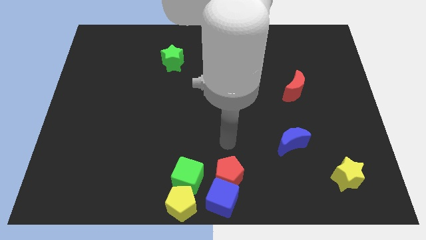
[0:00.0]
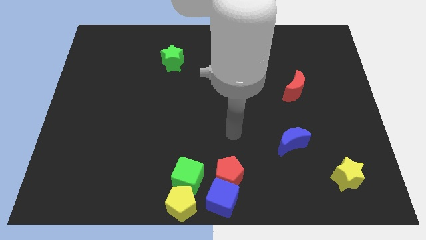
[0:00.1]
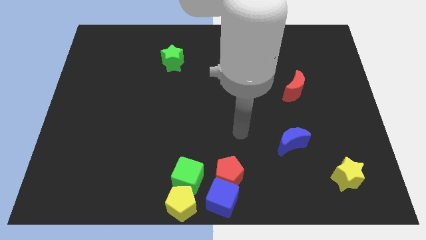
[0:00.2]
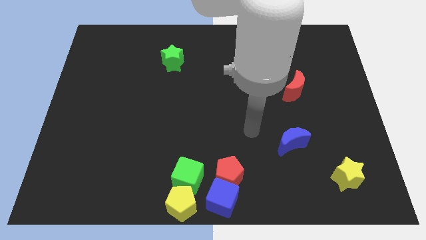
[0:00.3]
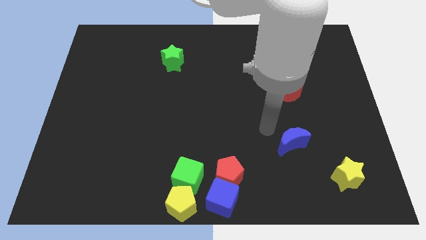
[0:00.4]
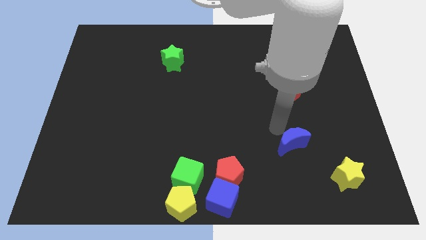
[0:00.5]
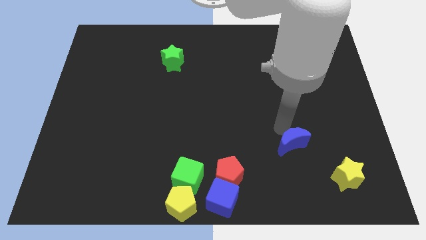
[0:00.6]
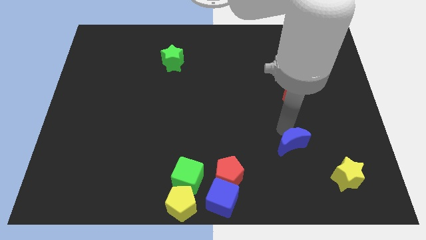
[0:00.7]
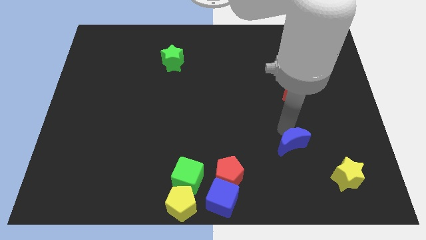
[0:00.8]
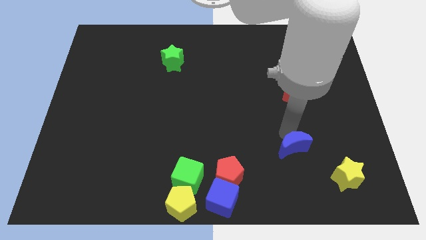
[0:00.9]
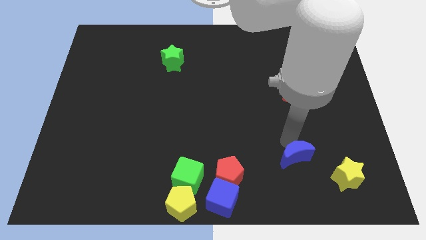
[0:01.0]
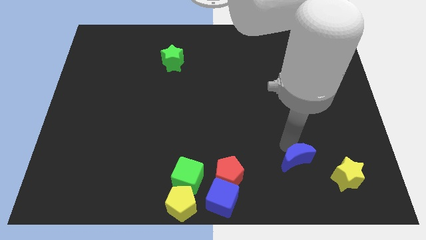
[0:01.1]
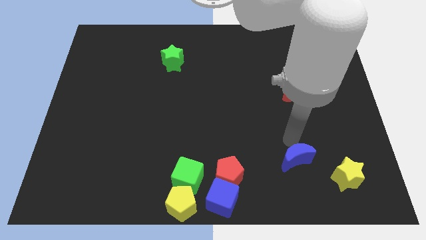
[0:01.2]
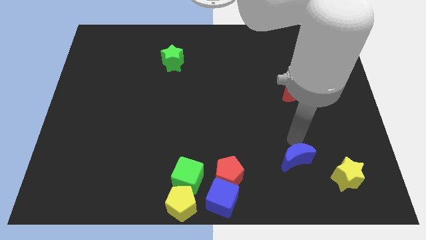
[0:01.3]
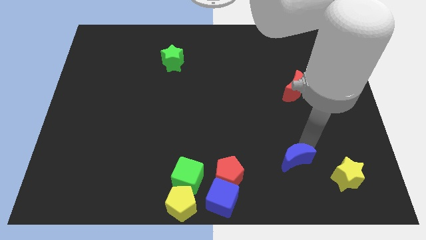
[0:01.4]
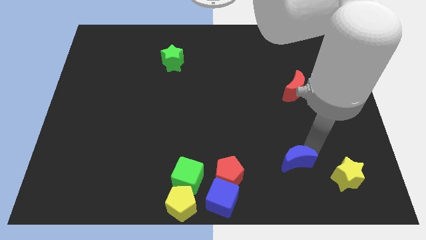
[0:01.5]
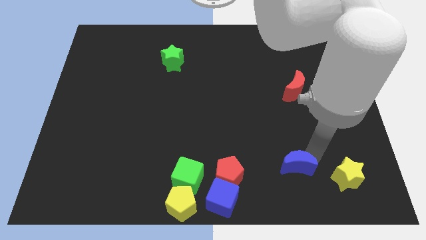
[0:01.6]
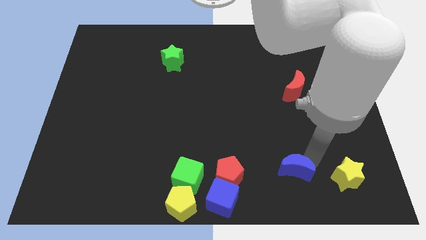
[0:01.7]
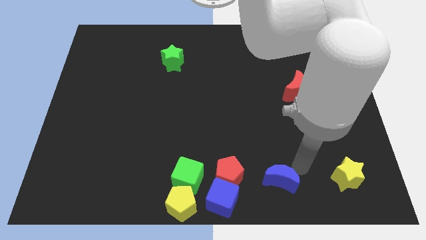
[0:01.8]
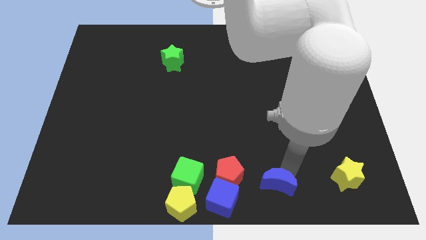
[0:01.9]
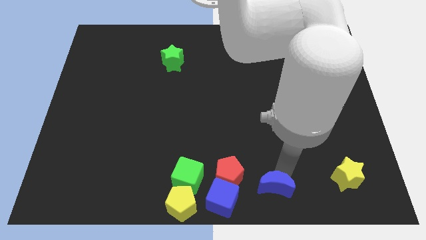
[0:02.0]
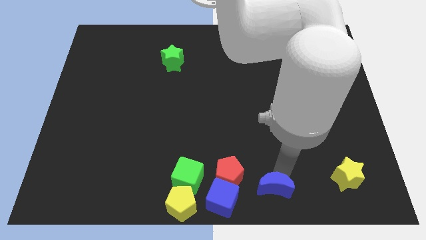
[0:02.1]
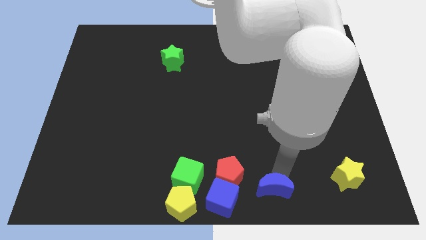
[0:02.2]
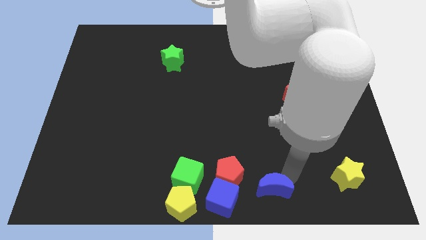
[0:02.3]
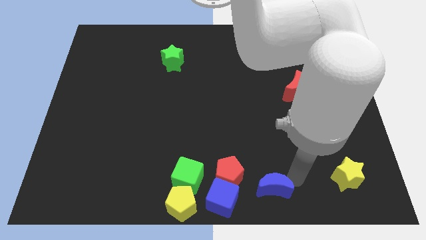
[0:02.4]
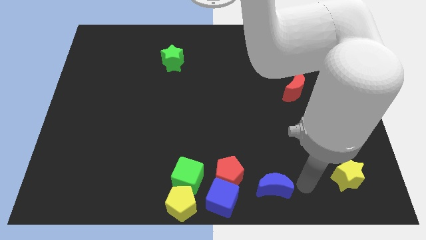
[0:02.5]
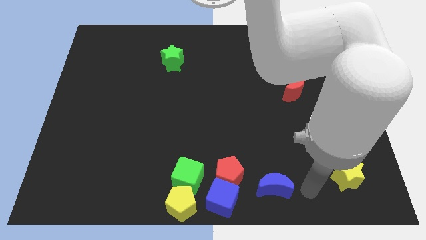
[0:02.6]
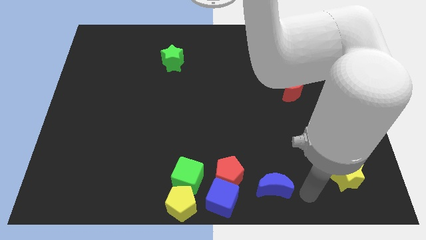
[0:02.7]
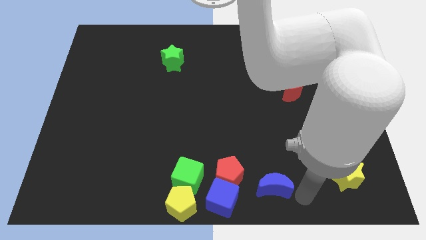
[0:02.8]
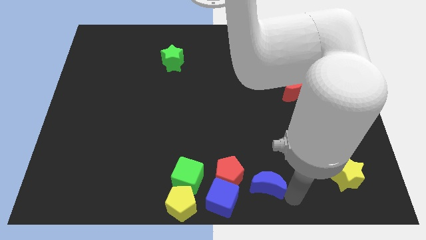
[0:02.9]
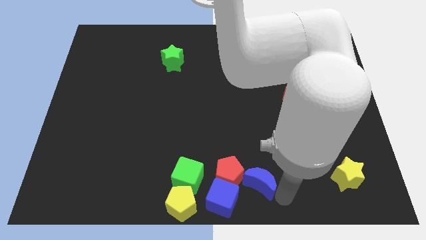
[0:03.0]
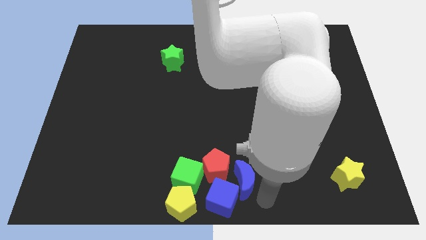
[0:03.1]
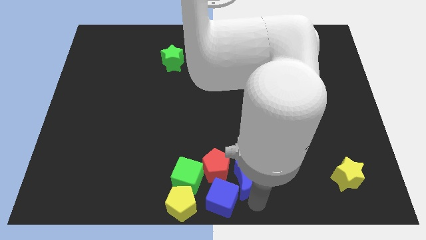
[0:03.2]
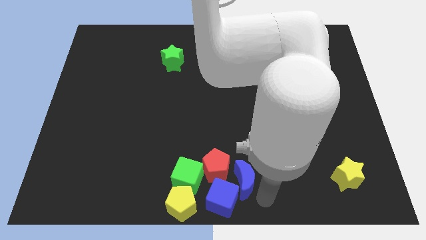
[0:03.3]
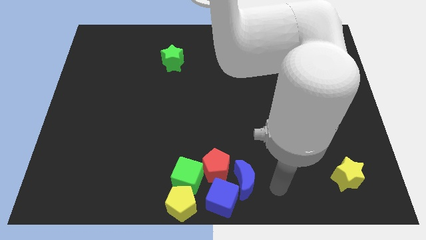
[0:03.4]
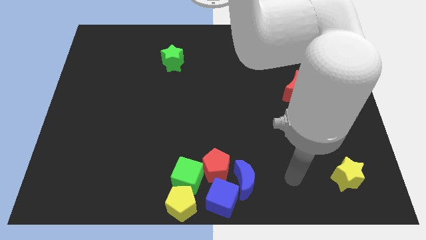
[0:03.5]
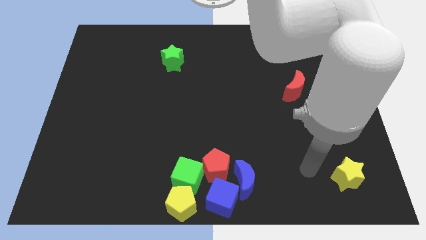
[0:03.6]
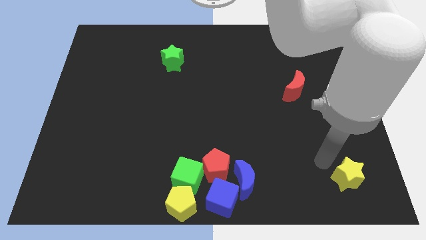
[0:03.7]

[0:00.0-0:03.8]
push the blue crescent into red pentagon

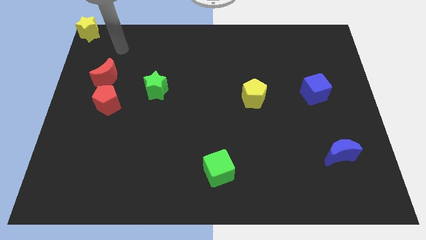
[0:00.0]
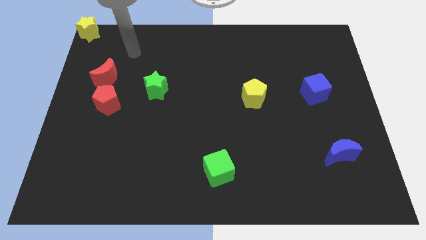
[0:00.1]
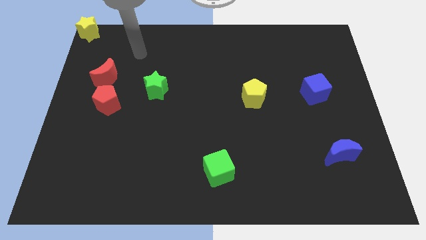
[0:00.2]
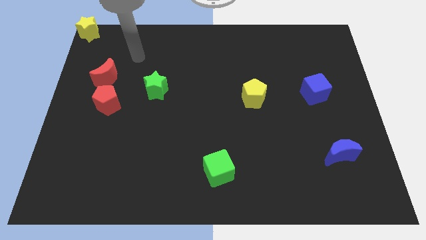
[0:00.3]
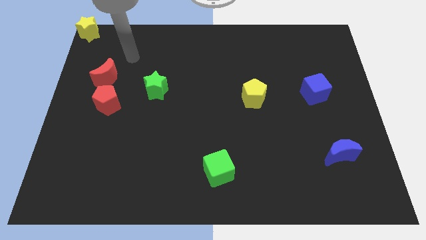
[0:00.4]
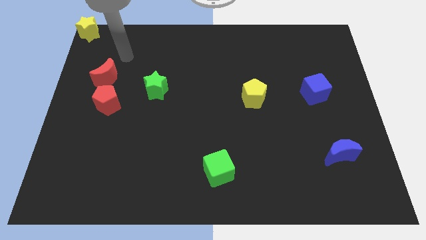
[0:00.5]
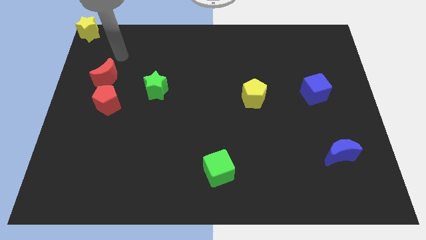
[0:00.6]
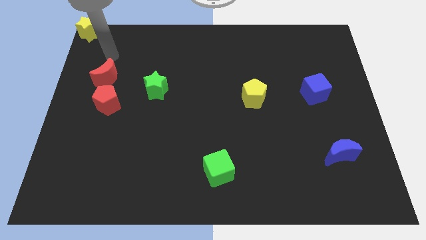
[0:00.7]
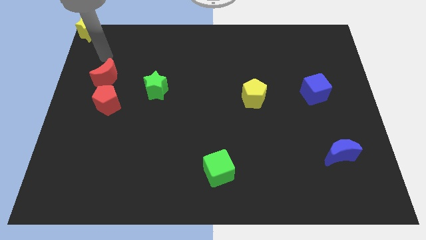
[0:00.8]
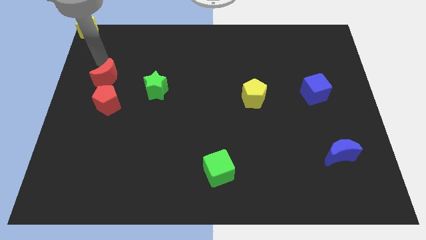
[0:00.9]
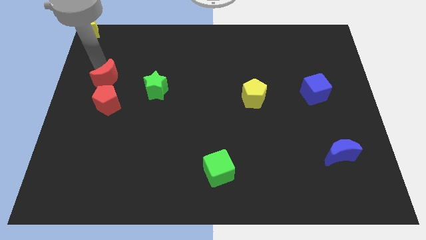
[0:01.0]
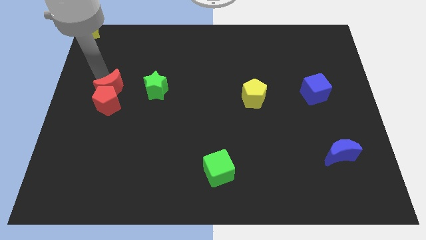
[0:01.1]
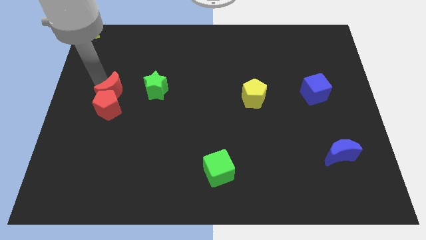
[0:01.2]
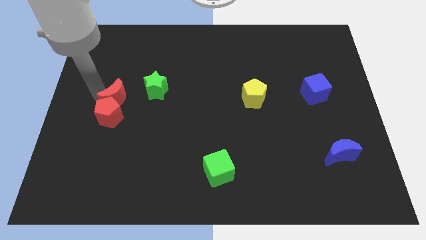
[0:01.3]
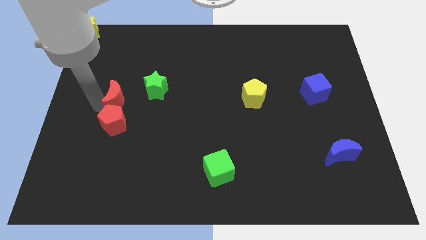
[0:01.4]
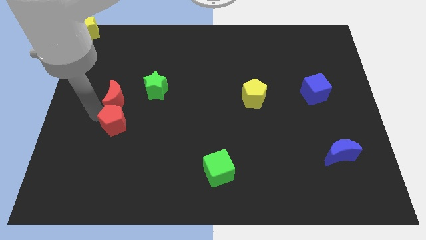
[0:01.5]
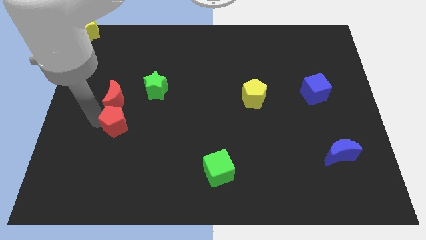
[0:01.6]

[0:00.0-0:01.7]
push the red moon into the red pentagon

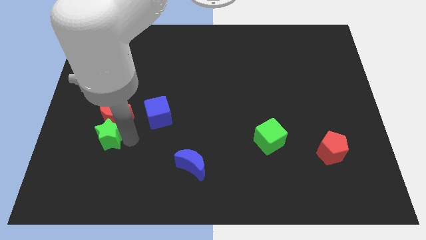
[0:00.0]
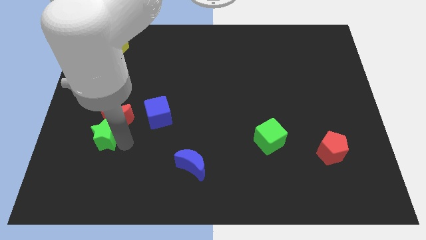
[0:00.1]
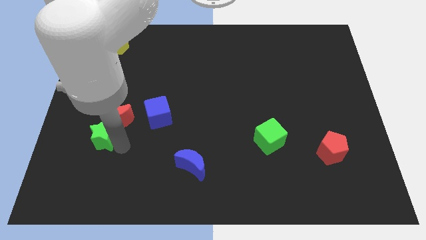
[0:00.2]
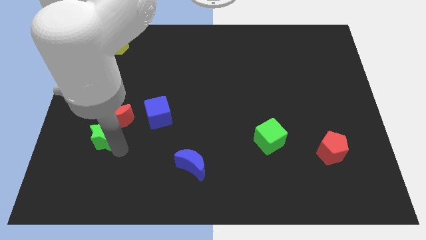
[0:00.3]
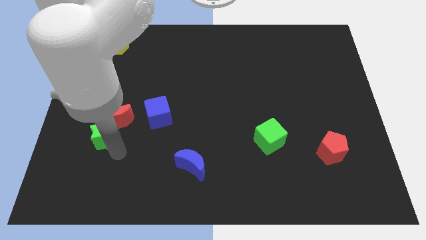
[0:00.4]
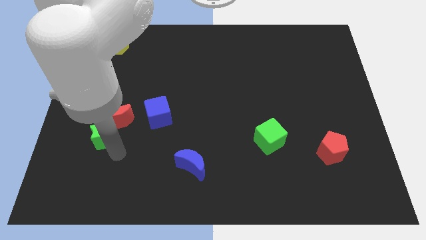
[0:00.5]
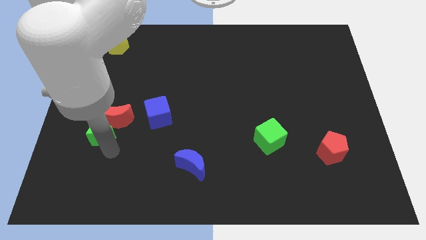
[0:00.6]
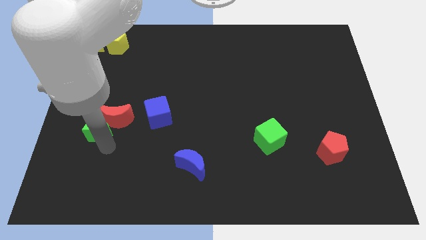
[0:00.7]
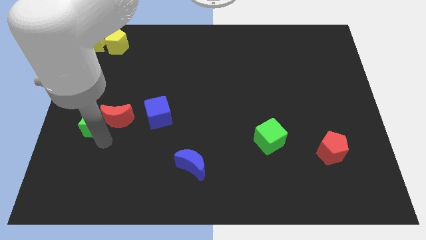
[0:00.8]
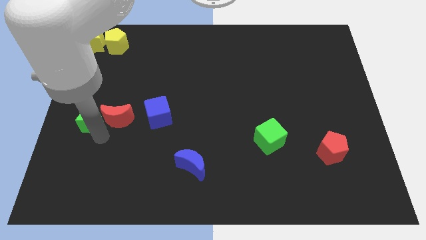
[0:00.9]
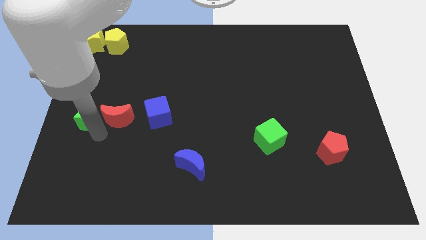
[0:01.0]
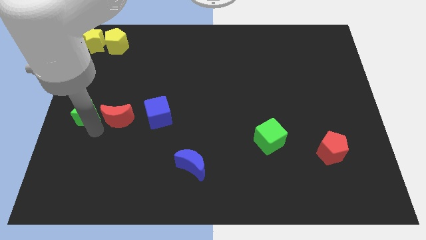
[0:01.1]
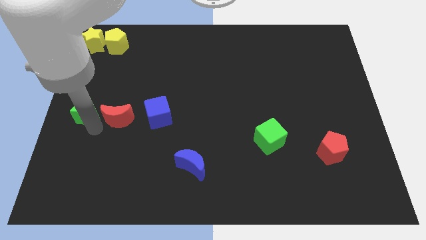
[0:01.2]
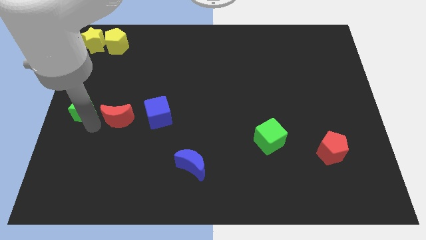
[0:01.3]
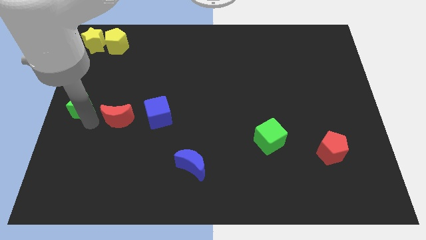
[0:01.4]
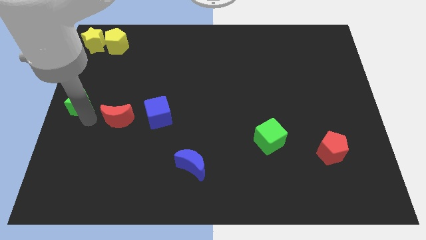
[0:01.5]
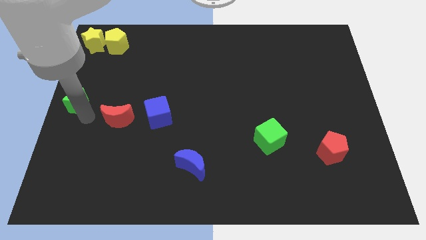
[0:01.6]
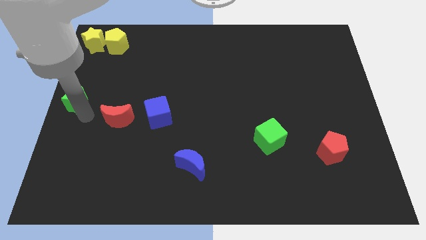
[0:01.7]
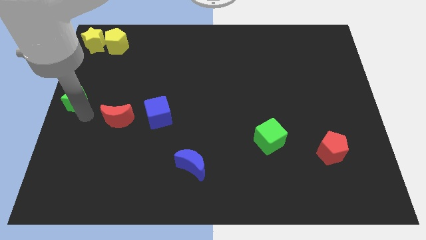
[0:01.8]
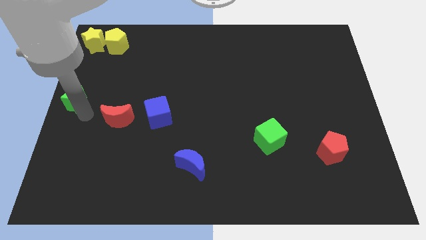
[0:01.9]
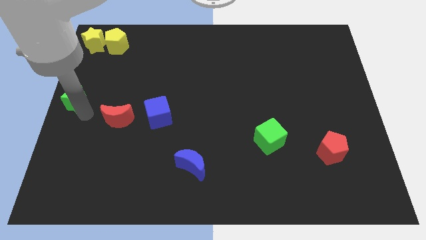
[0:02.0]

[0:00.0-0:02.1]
move the green star to the left side of the board

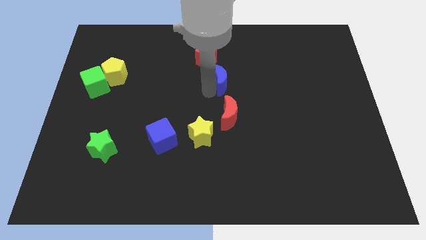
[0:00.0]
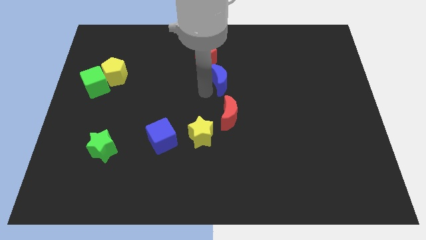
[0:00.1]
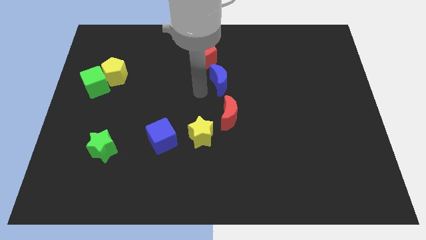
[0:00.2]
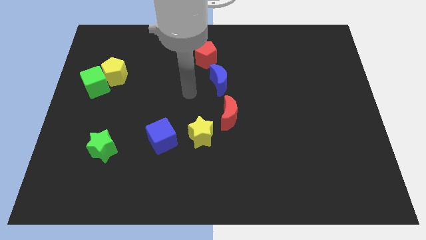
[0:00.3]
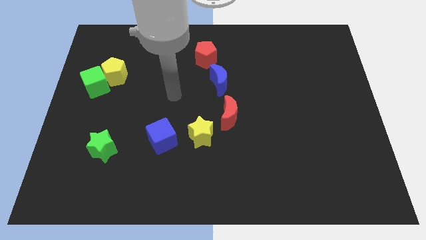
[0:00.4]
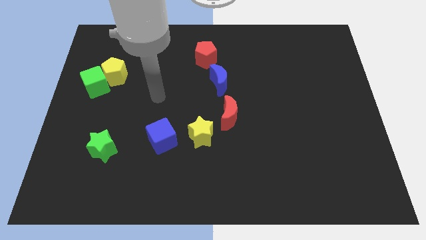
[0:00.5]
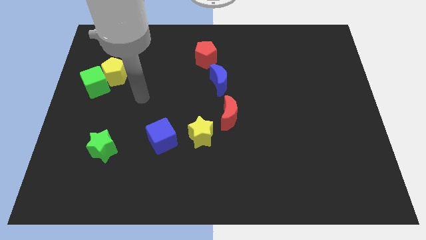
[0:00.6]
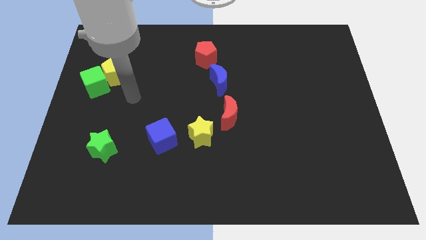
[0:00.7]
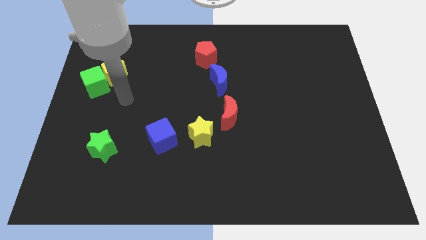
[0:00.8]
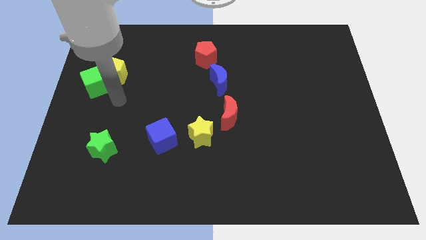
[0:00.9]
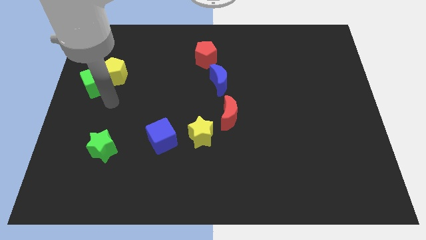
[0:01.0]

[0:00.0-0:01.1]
move your arm towards the left side of the board

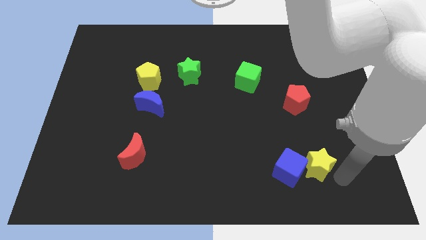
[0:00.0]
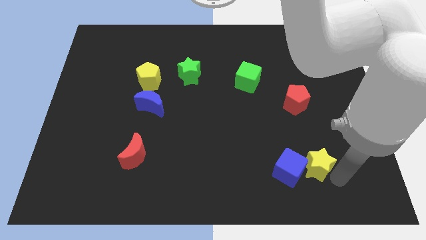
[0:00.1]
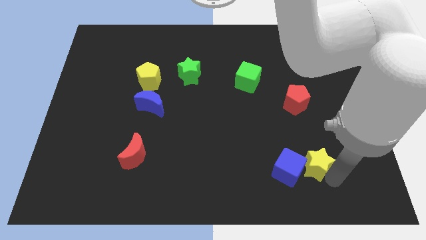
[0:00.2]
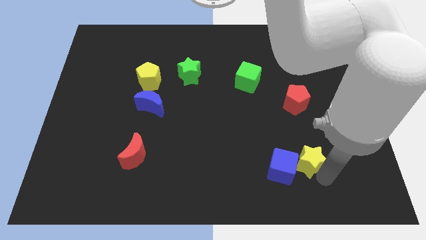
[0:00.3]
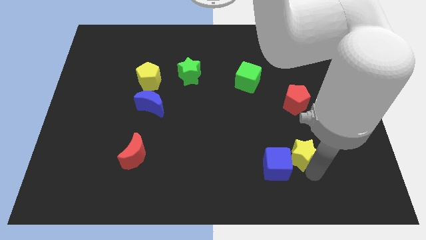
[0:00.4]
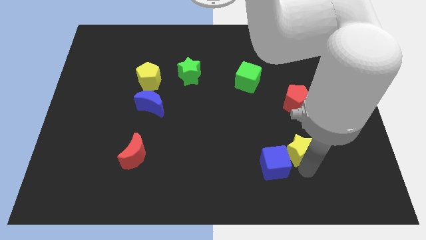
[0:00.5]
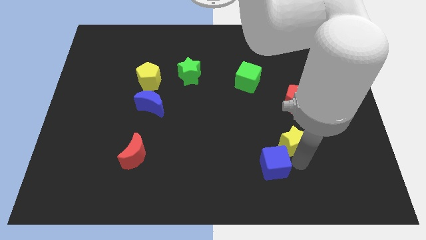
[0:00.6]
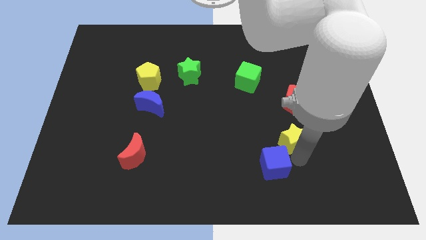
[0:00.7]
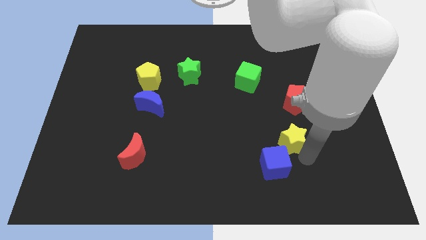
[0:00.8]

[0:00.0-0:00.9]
slightly push the blue cube and the yellow star towards left
